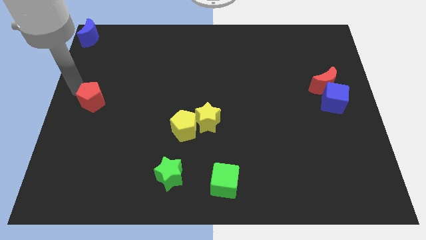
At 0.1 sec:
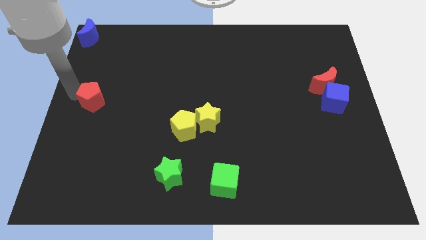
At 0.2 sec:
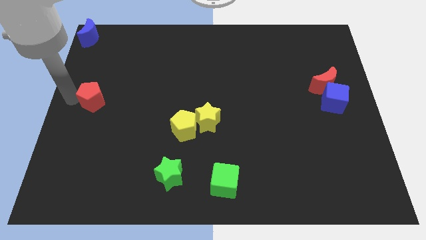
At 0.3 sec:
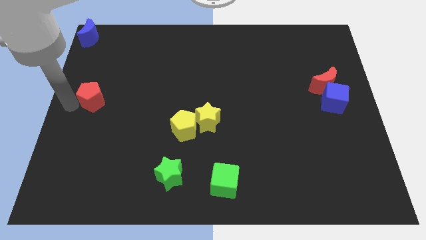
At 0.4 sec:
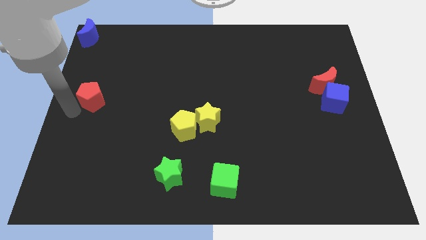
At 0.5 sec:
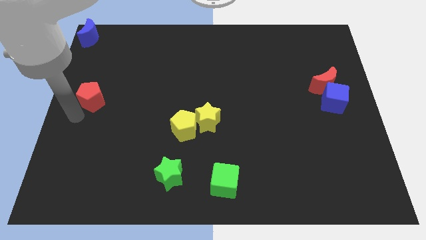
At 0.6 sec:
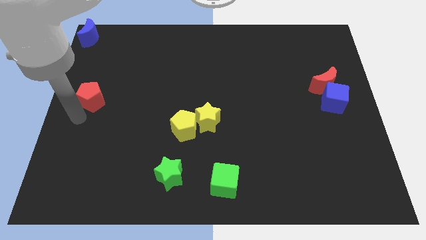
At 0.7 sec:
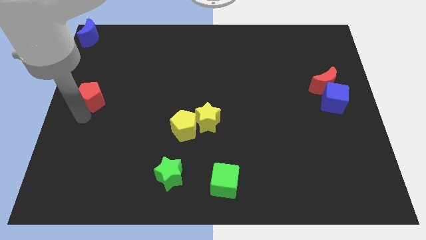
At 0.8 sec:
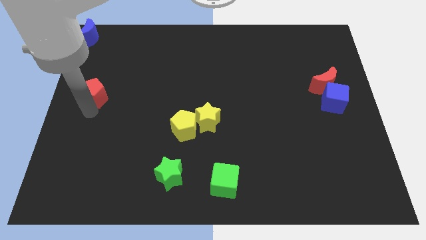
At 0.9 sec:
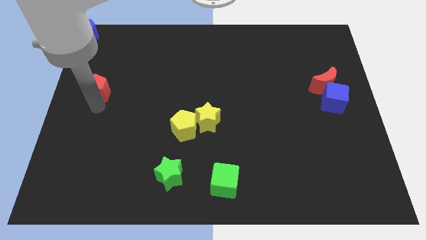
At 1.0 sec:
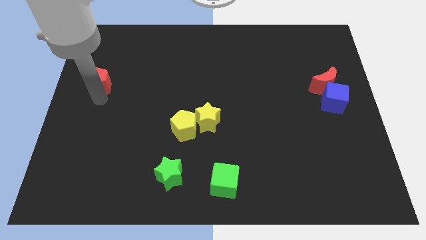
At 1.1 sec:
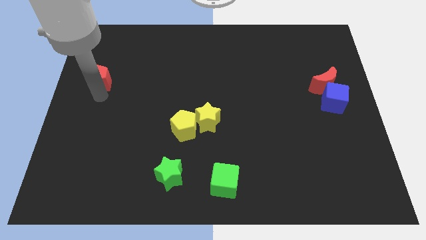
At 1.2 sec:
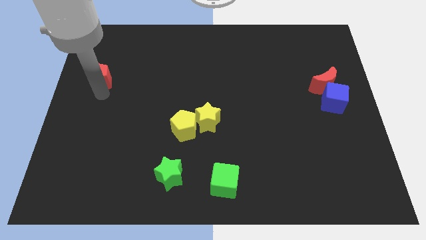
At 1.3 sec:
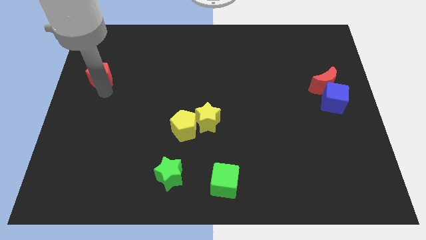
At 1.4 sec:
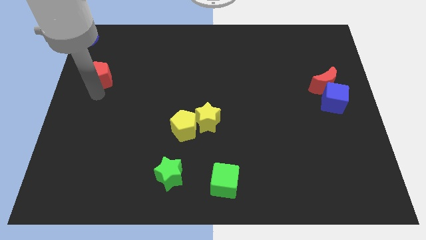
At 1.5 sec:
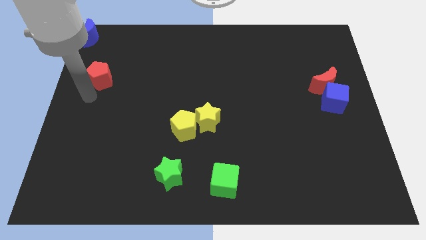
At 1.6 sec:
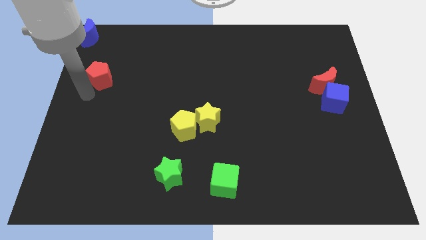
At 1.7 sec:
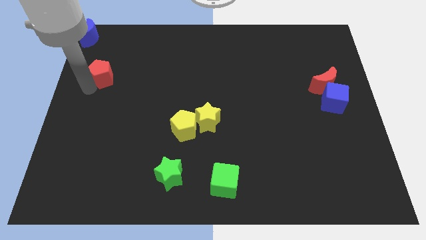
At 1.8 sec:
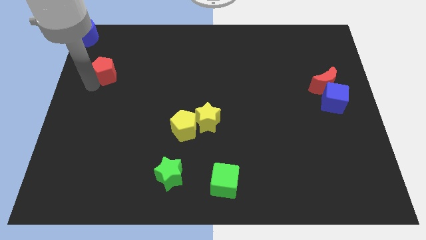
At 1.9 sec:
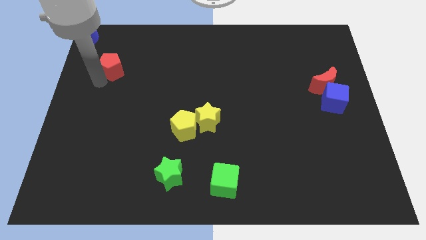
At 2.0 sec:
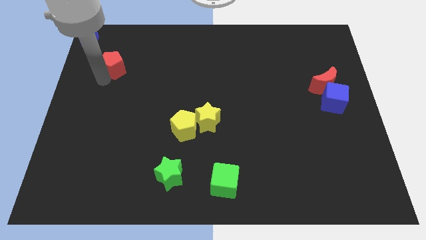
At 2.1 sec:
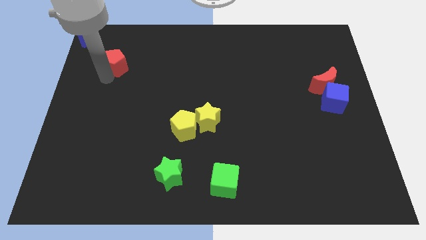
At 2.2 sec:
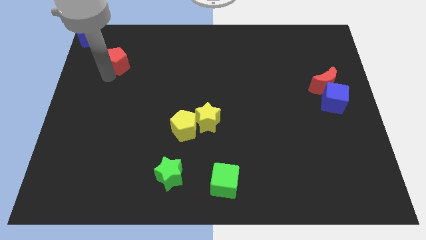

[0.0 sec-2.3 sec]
move the red pentagon parallel to the blue crescent

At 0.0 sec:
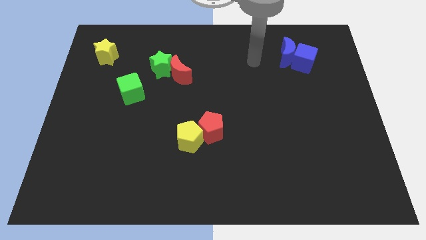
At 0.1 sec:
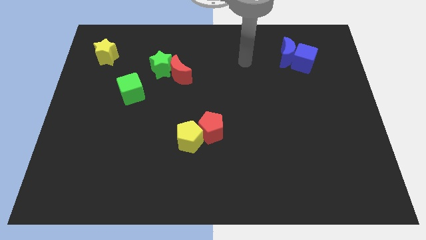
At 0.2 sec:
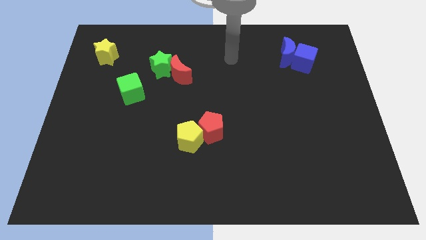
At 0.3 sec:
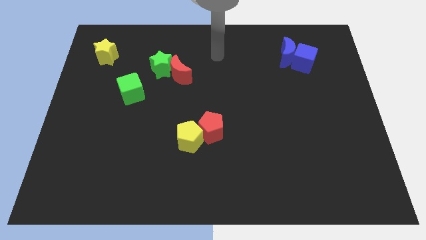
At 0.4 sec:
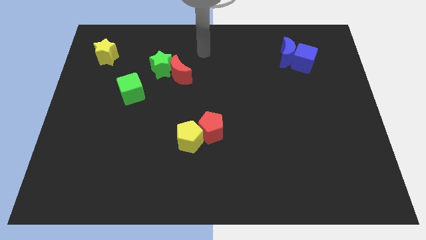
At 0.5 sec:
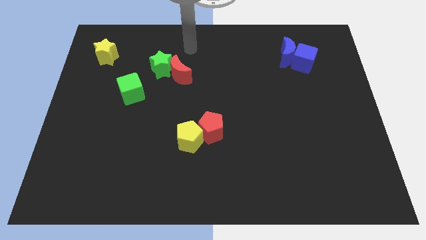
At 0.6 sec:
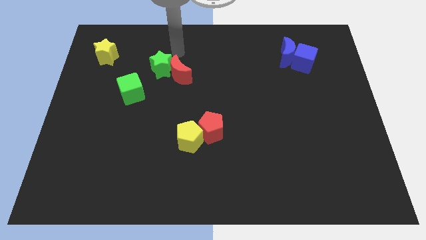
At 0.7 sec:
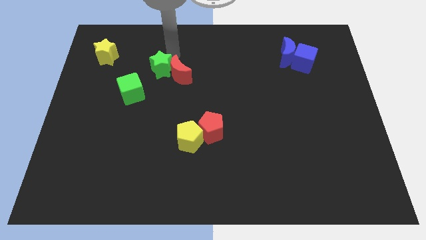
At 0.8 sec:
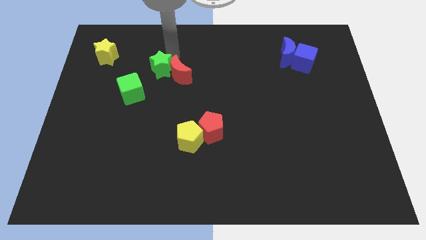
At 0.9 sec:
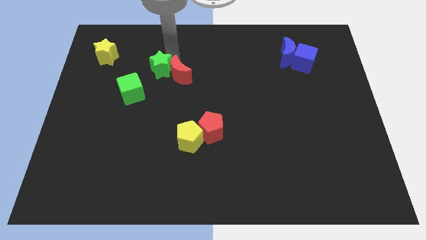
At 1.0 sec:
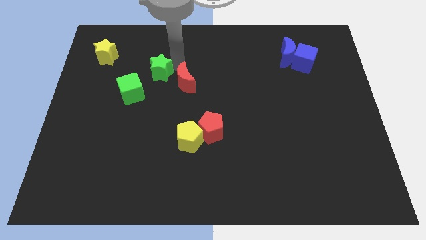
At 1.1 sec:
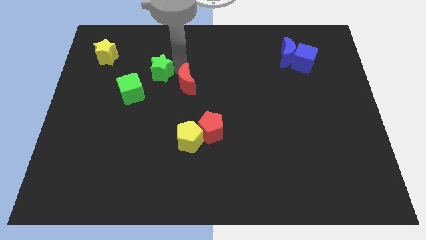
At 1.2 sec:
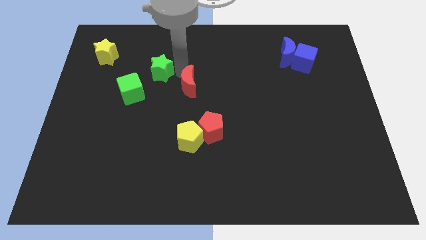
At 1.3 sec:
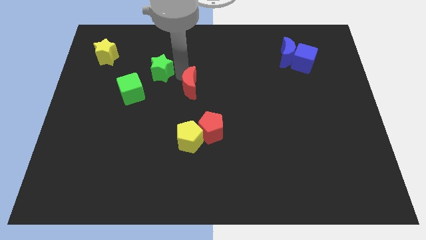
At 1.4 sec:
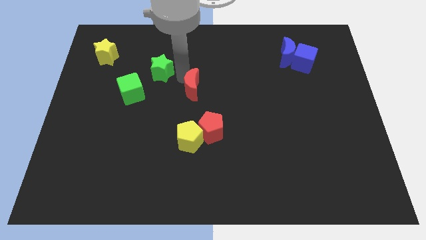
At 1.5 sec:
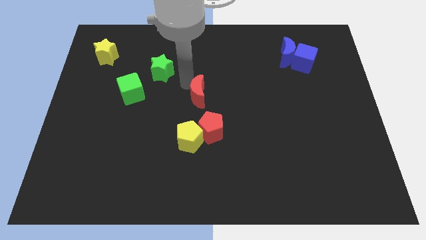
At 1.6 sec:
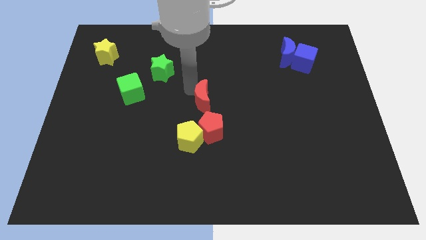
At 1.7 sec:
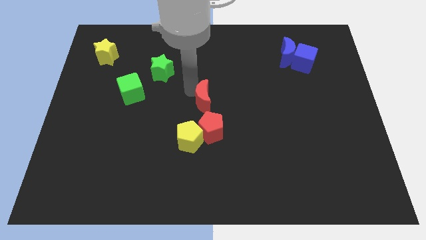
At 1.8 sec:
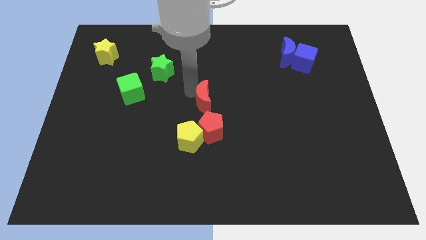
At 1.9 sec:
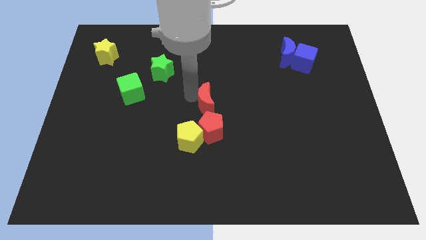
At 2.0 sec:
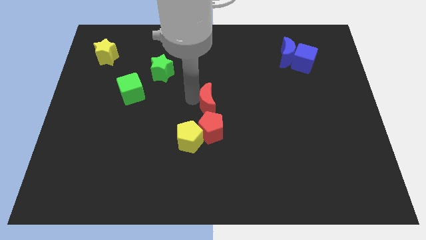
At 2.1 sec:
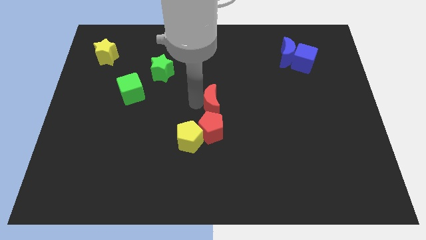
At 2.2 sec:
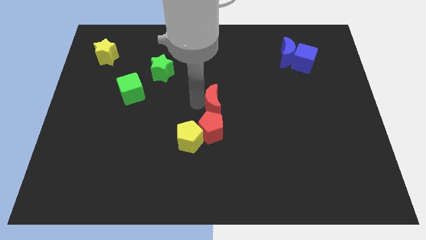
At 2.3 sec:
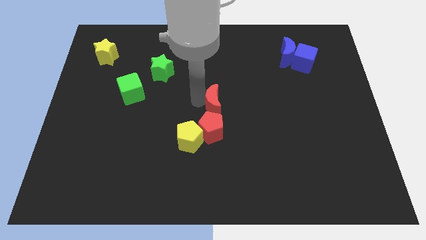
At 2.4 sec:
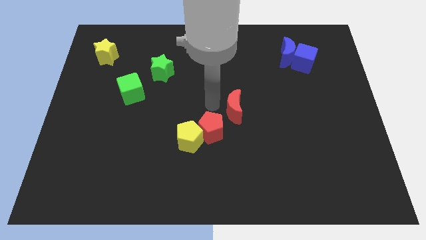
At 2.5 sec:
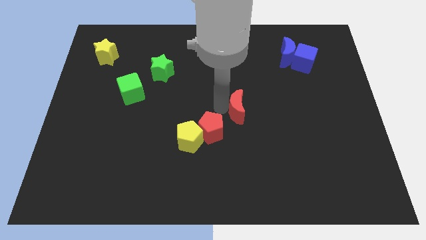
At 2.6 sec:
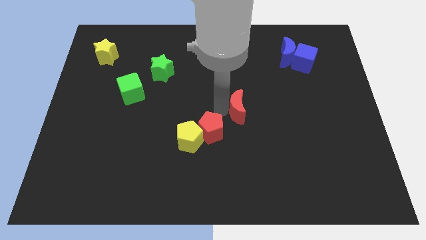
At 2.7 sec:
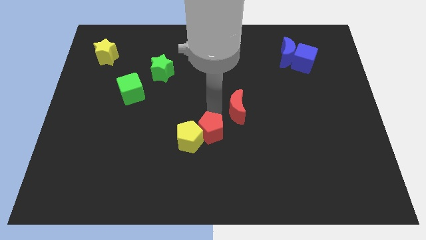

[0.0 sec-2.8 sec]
separate the red moon from the green star

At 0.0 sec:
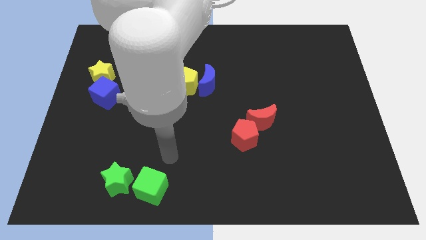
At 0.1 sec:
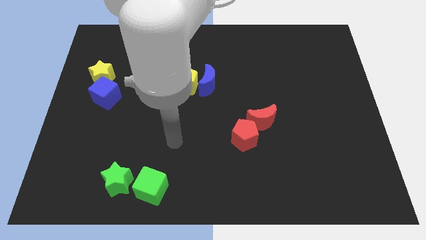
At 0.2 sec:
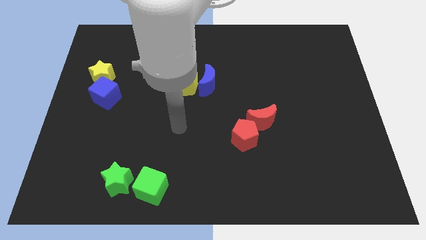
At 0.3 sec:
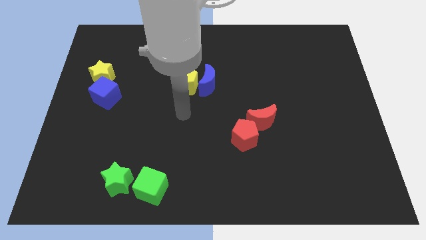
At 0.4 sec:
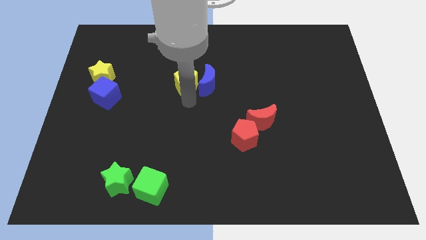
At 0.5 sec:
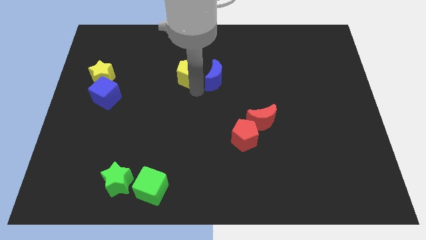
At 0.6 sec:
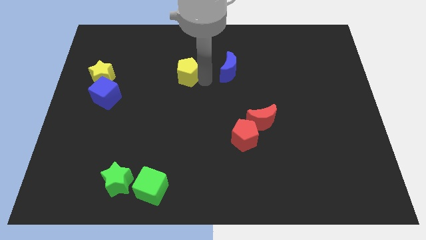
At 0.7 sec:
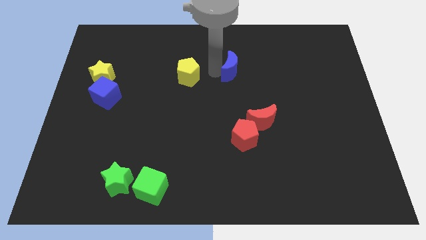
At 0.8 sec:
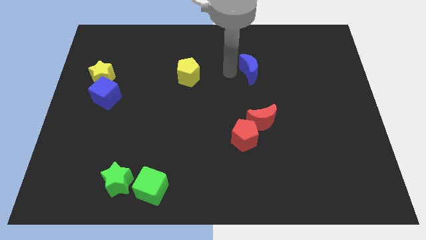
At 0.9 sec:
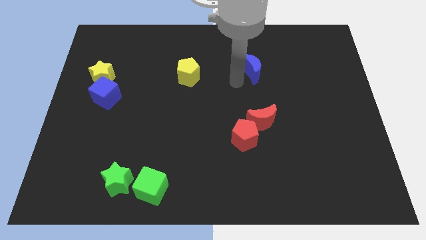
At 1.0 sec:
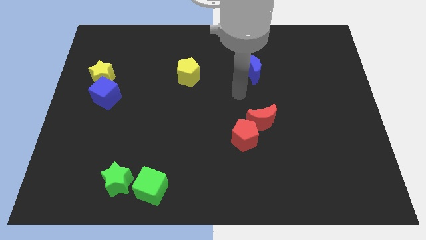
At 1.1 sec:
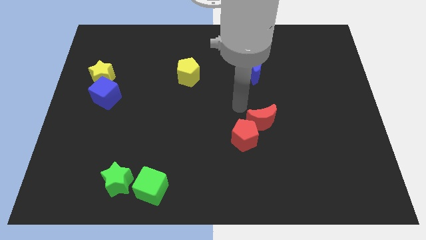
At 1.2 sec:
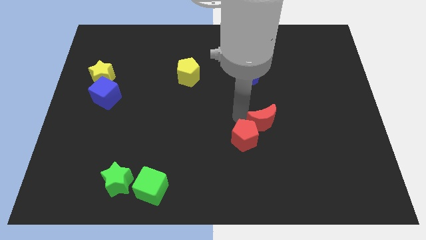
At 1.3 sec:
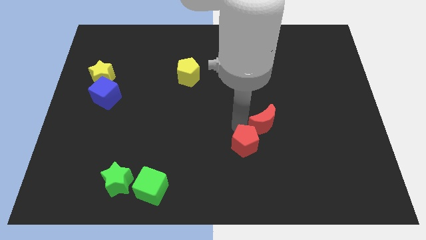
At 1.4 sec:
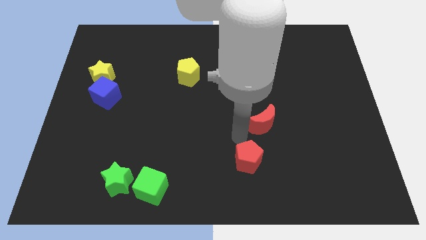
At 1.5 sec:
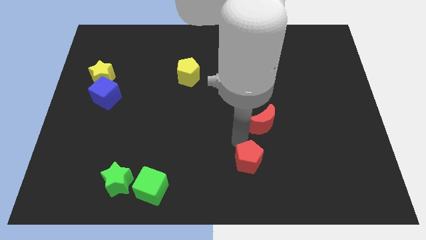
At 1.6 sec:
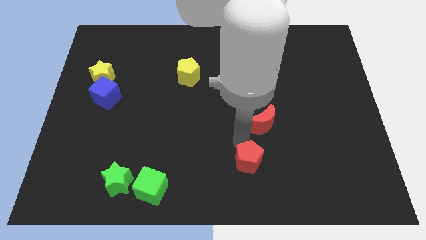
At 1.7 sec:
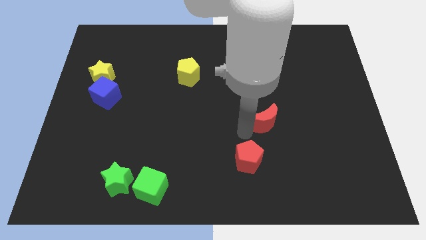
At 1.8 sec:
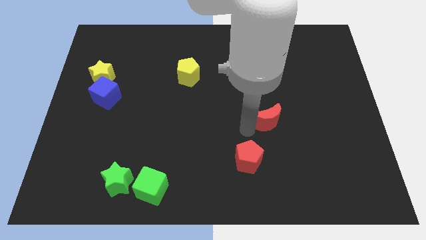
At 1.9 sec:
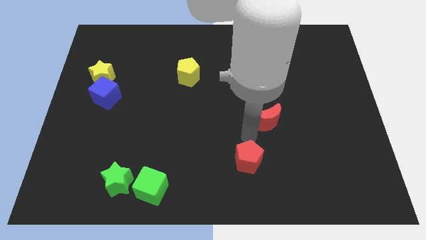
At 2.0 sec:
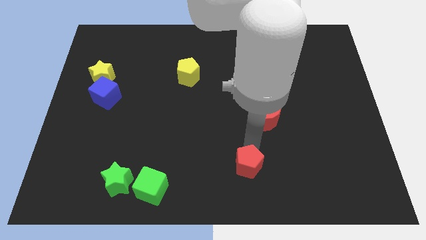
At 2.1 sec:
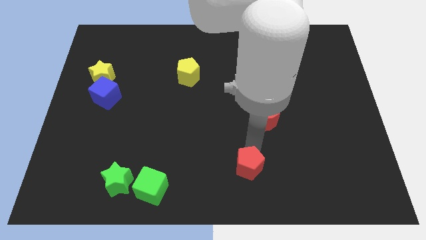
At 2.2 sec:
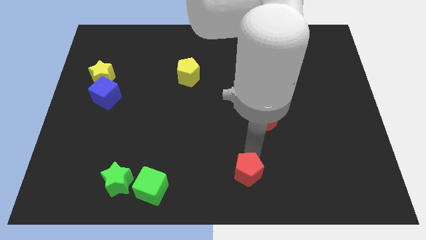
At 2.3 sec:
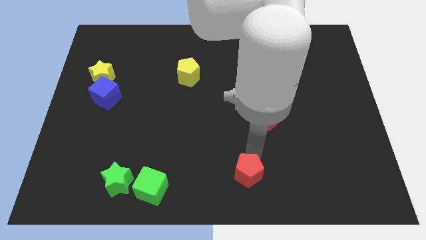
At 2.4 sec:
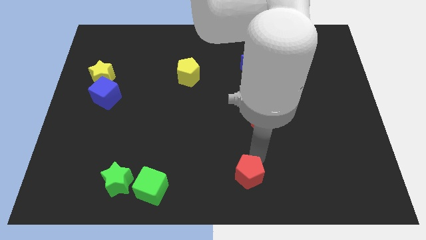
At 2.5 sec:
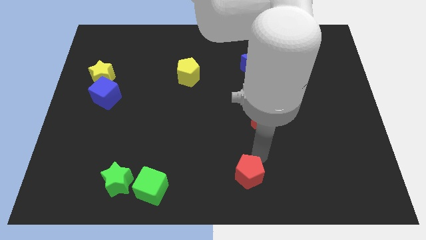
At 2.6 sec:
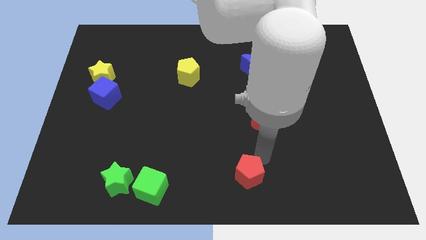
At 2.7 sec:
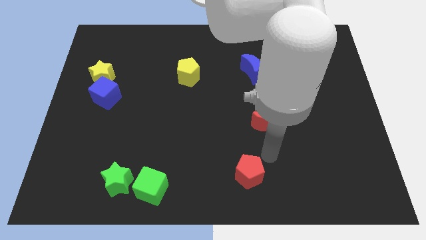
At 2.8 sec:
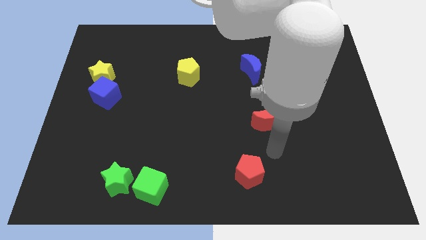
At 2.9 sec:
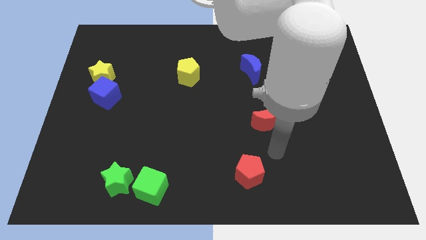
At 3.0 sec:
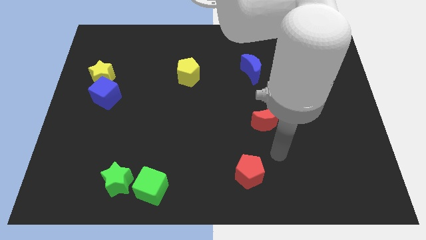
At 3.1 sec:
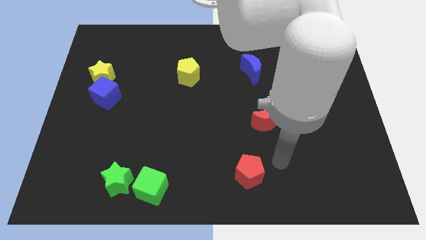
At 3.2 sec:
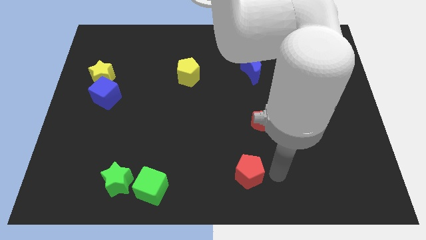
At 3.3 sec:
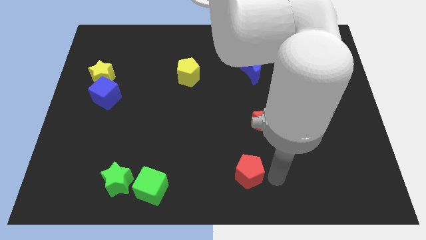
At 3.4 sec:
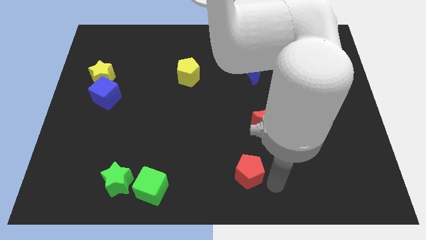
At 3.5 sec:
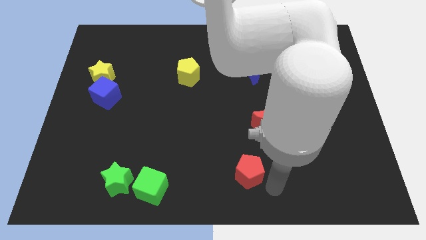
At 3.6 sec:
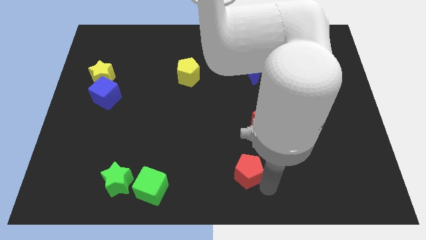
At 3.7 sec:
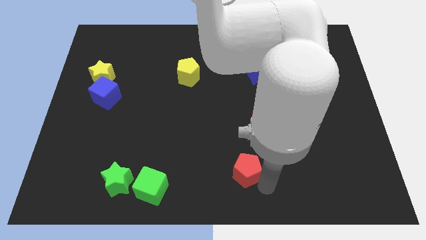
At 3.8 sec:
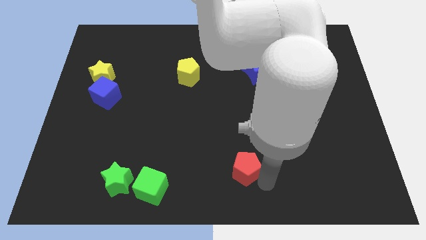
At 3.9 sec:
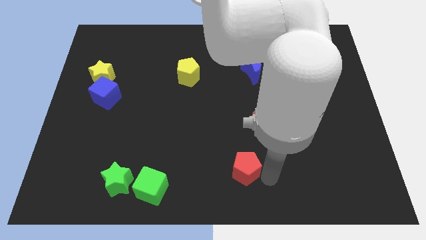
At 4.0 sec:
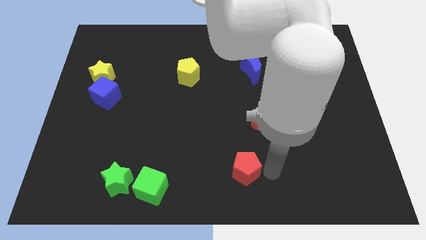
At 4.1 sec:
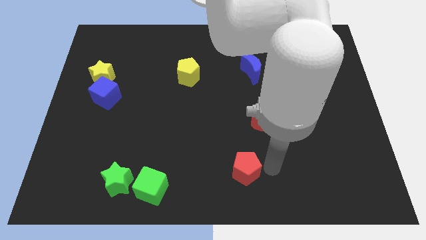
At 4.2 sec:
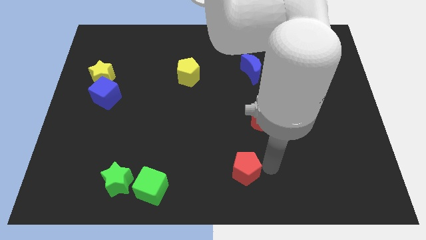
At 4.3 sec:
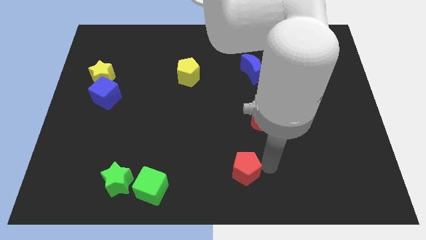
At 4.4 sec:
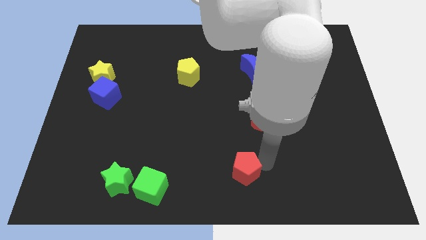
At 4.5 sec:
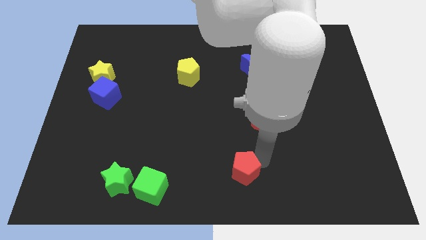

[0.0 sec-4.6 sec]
separate the blue crescent and the red pentagon from the blocks
